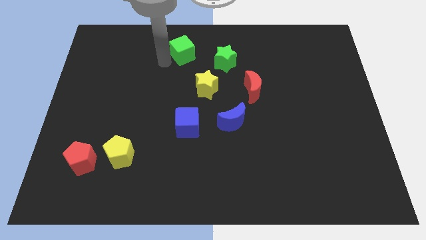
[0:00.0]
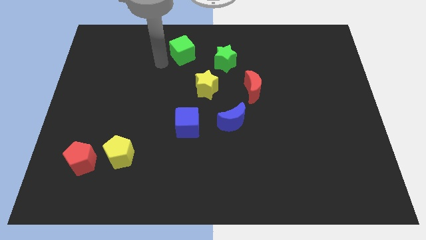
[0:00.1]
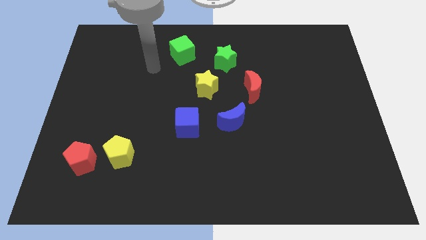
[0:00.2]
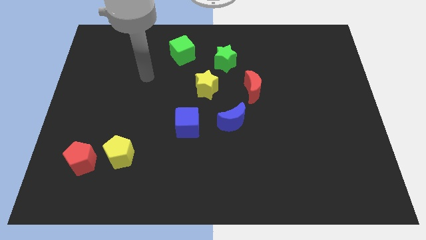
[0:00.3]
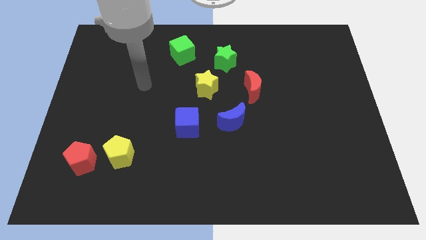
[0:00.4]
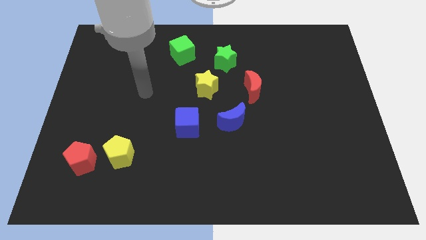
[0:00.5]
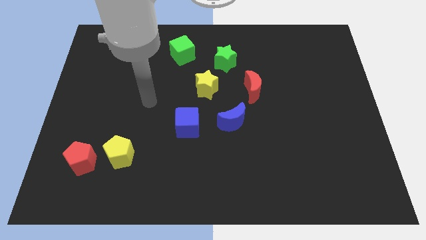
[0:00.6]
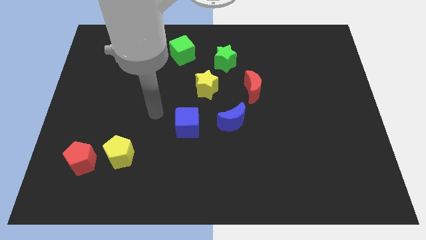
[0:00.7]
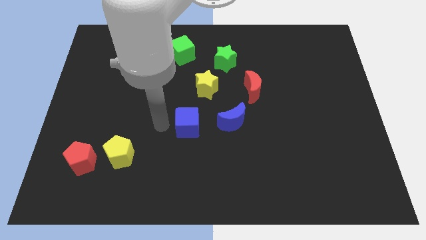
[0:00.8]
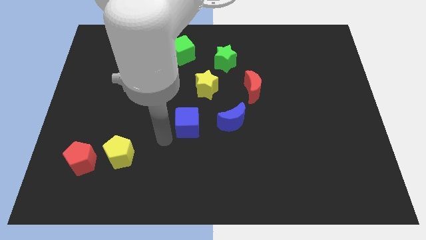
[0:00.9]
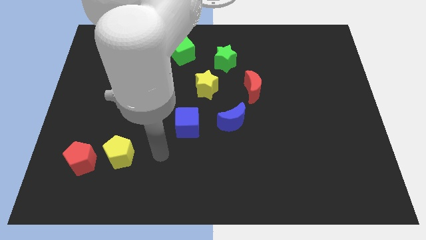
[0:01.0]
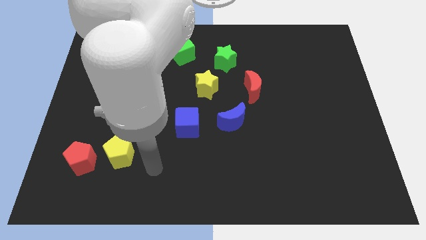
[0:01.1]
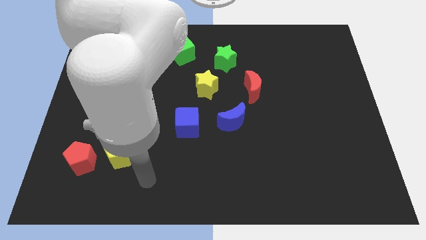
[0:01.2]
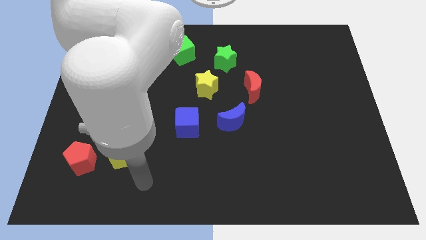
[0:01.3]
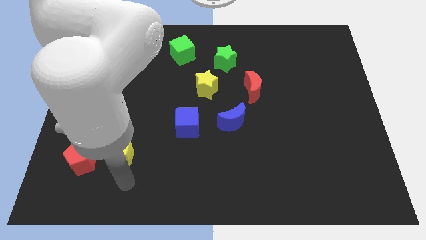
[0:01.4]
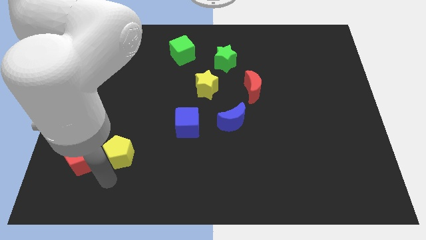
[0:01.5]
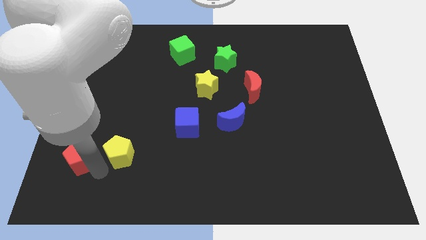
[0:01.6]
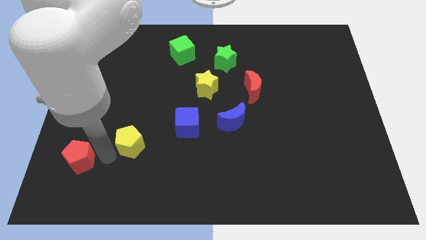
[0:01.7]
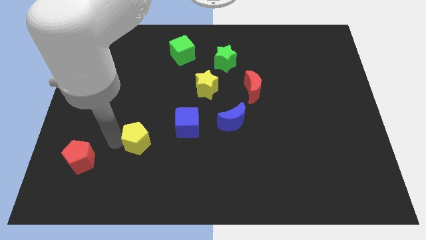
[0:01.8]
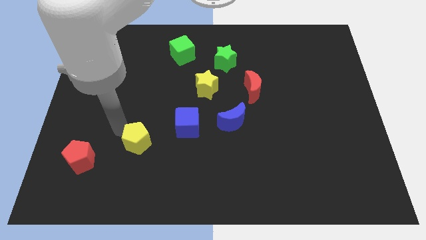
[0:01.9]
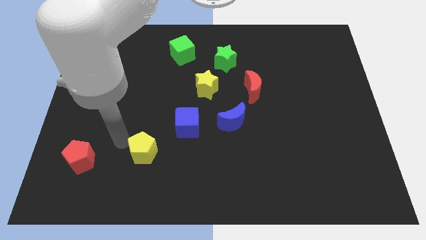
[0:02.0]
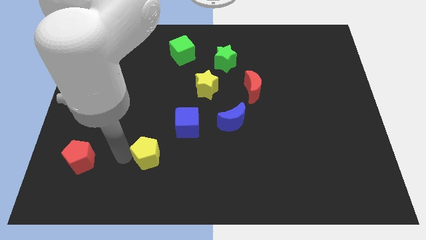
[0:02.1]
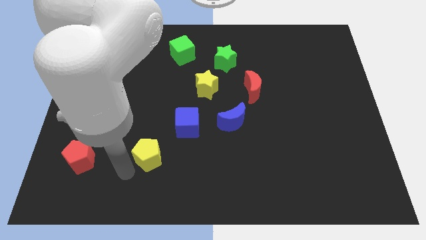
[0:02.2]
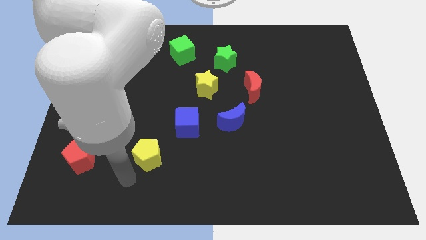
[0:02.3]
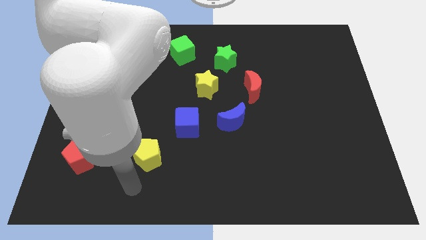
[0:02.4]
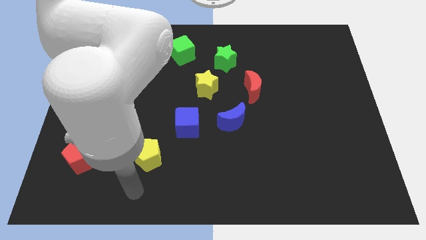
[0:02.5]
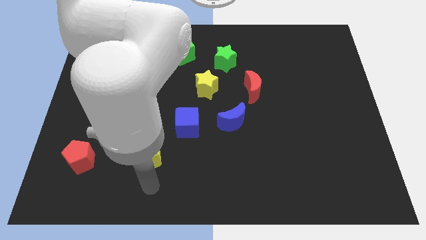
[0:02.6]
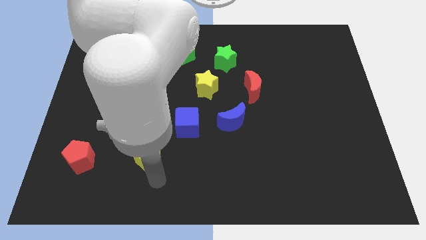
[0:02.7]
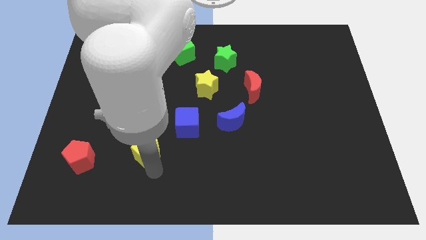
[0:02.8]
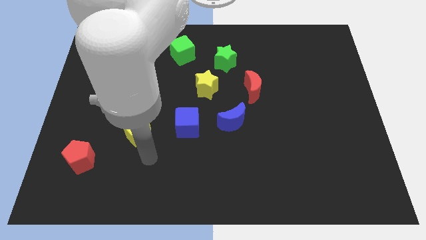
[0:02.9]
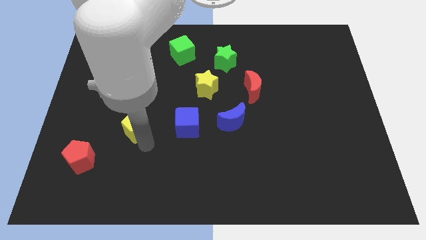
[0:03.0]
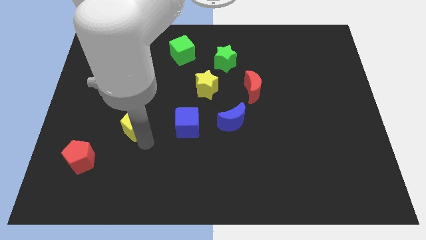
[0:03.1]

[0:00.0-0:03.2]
move the yellow pentagon to the left of the blue cube

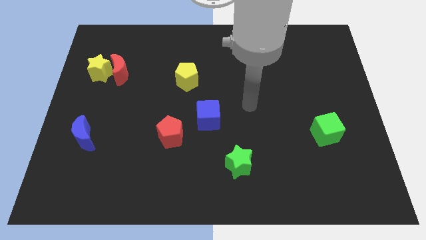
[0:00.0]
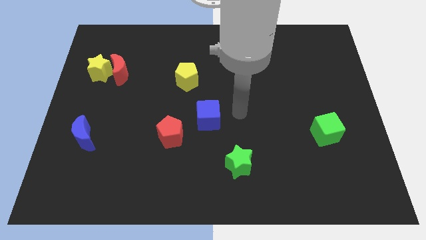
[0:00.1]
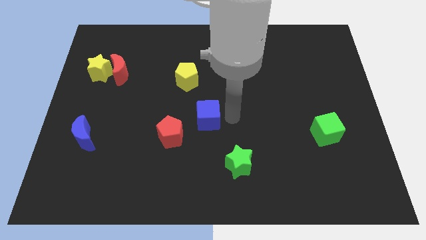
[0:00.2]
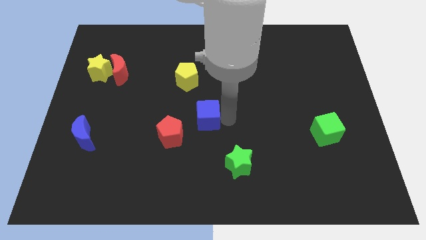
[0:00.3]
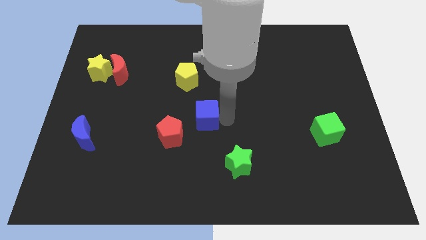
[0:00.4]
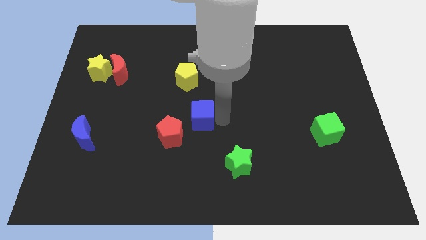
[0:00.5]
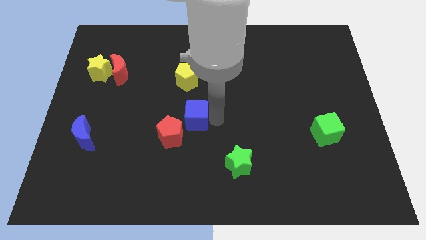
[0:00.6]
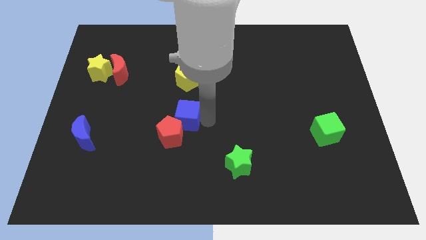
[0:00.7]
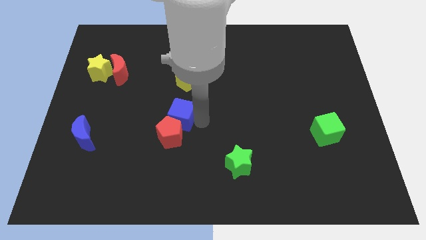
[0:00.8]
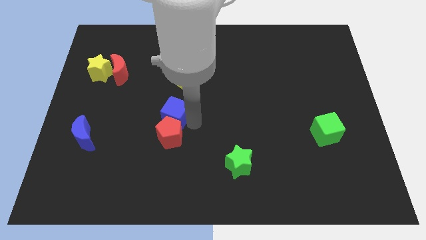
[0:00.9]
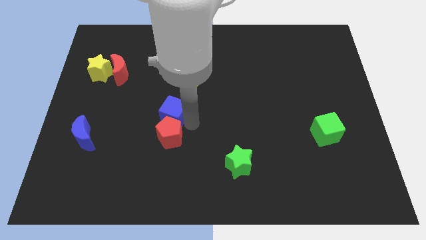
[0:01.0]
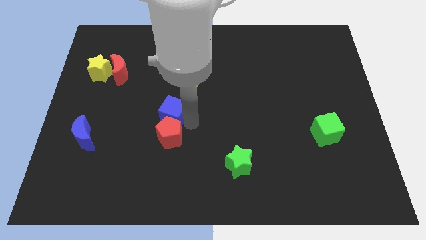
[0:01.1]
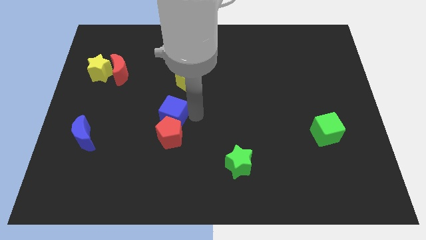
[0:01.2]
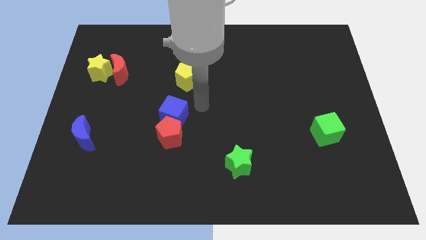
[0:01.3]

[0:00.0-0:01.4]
move the blue cube above to the red pentagon

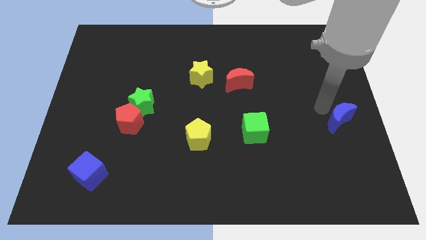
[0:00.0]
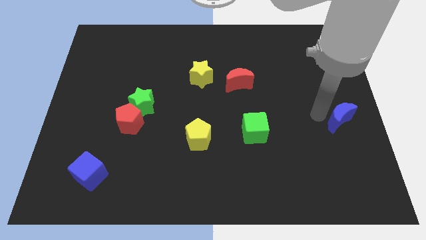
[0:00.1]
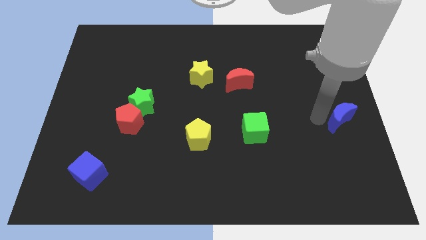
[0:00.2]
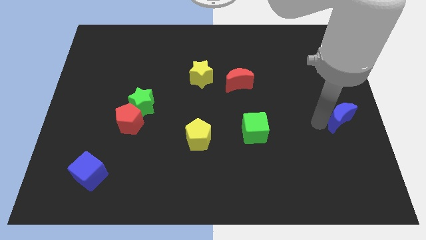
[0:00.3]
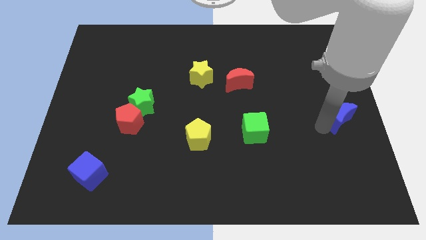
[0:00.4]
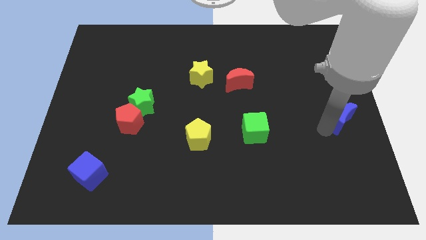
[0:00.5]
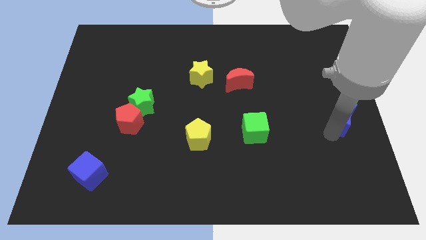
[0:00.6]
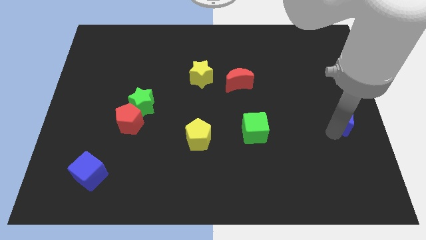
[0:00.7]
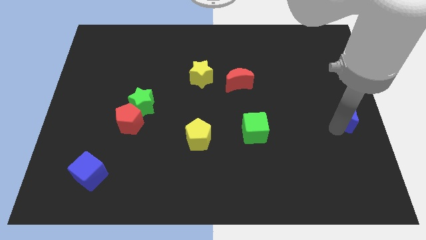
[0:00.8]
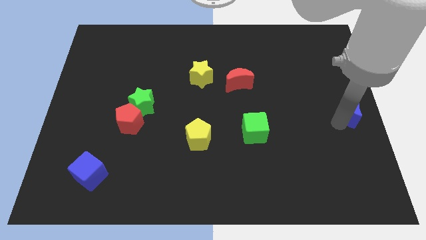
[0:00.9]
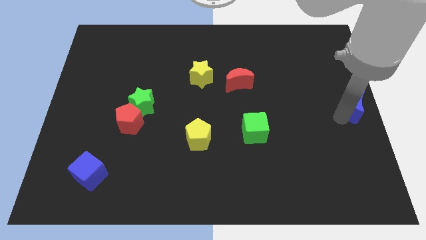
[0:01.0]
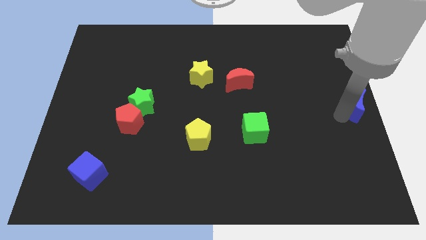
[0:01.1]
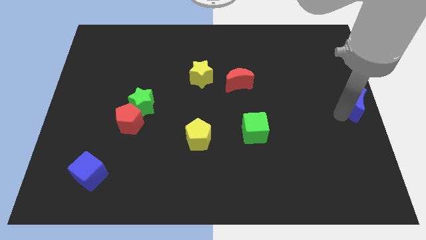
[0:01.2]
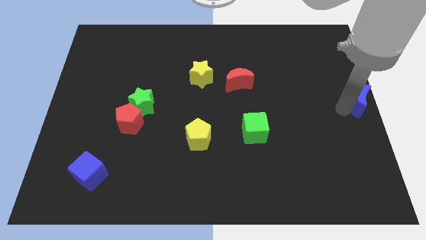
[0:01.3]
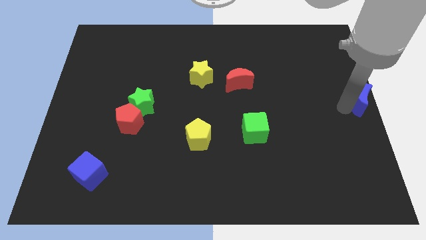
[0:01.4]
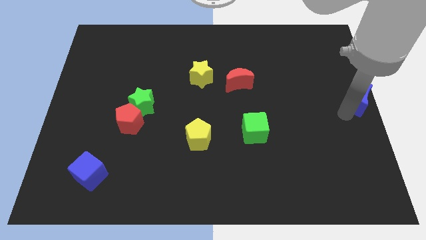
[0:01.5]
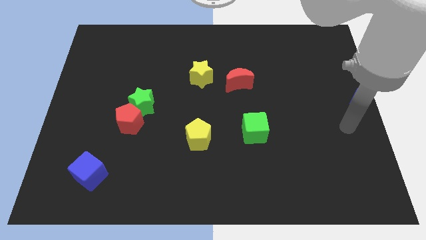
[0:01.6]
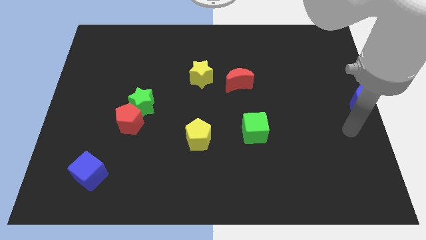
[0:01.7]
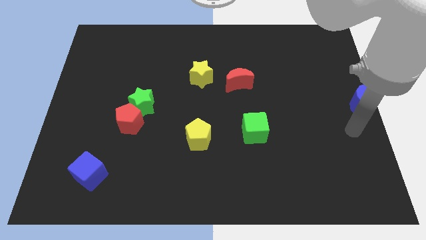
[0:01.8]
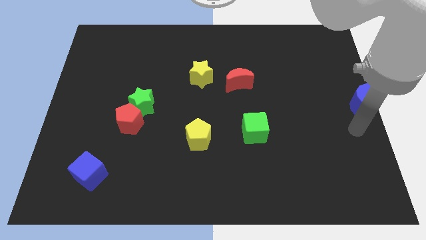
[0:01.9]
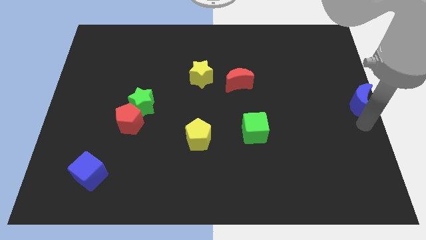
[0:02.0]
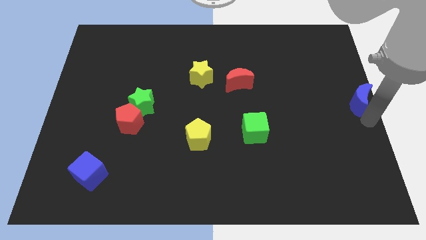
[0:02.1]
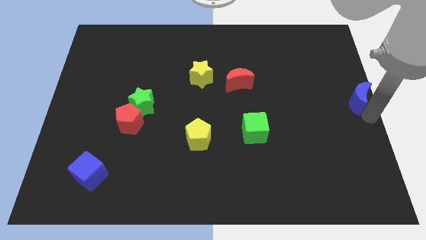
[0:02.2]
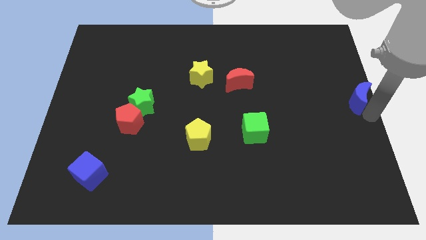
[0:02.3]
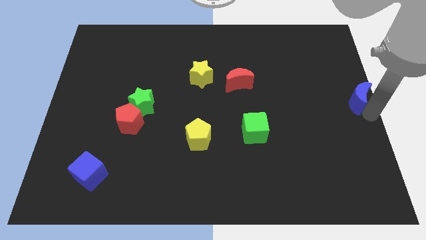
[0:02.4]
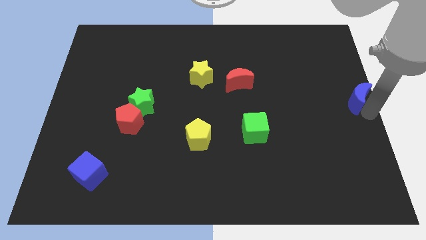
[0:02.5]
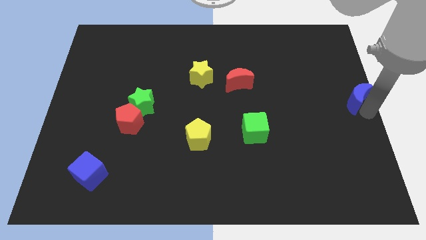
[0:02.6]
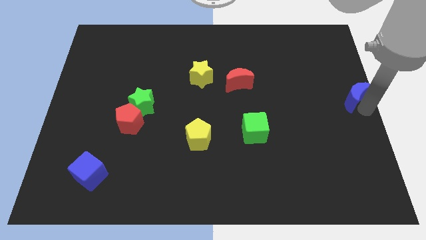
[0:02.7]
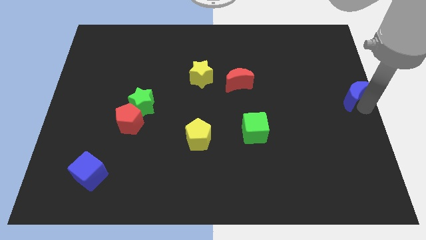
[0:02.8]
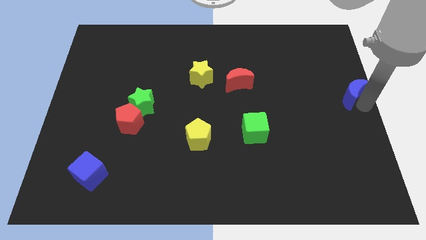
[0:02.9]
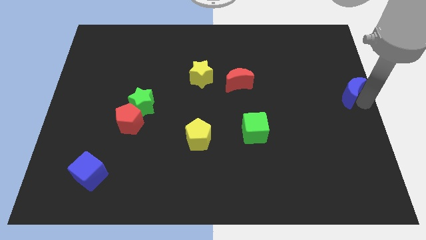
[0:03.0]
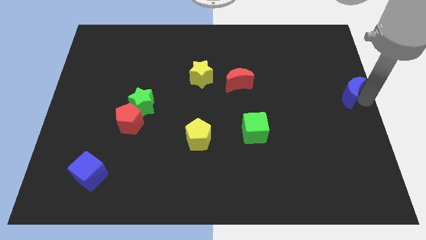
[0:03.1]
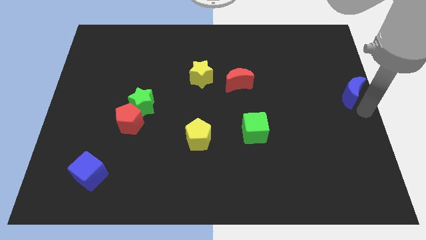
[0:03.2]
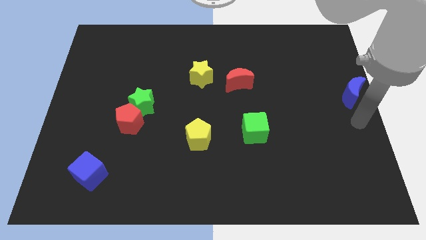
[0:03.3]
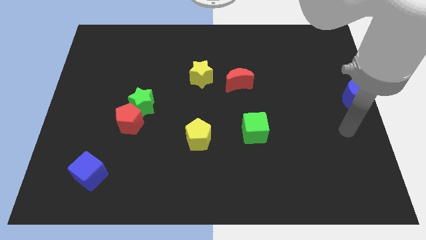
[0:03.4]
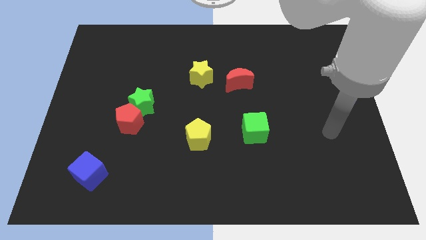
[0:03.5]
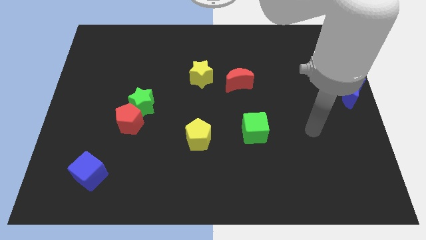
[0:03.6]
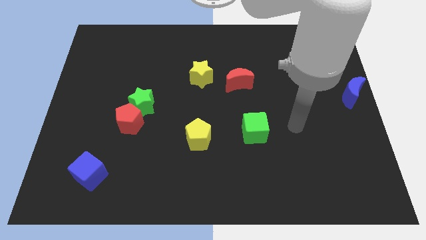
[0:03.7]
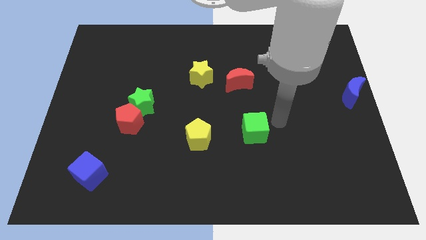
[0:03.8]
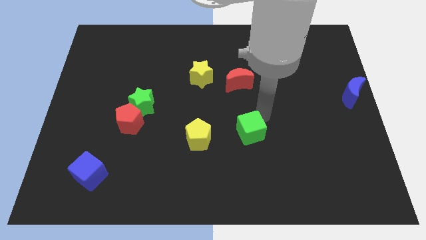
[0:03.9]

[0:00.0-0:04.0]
move blue moon slightly upwards

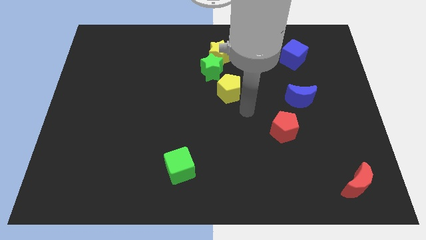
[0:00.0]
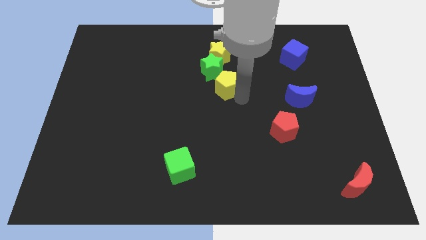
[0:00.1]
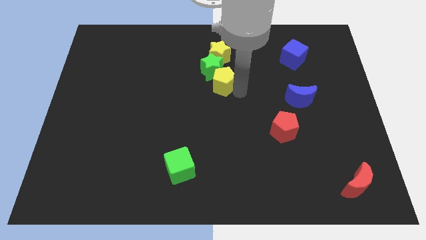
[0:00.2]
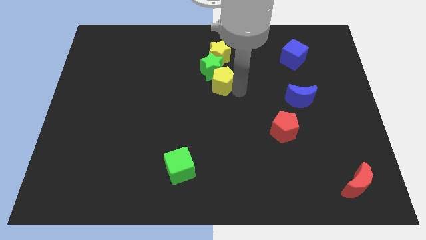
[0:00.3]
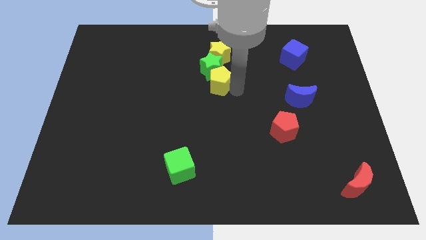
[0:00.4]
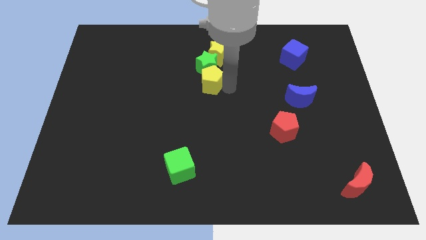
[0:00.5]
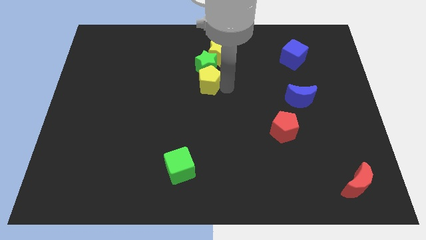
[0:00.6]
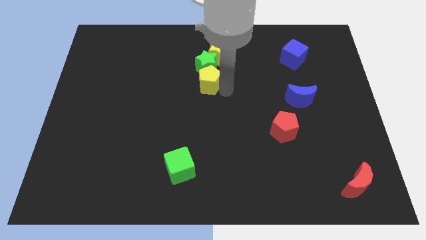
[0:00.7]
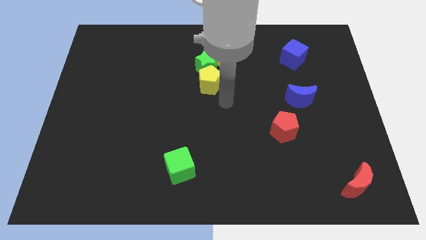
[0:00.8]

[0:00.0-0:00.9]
push the yellow pentagon into the green star
